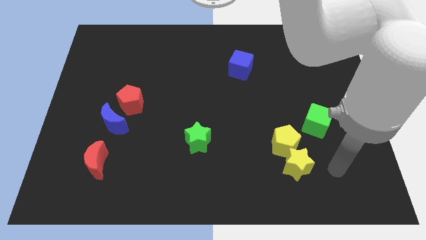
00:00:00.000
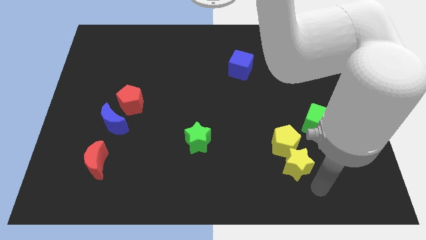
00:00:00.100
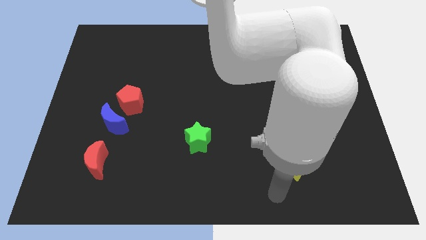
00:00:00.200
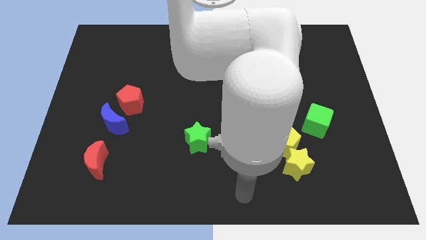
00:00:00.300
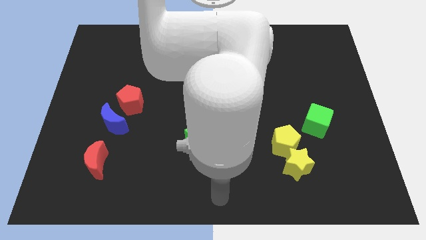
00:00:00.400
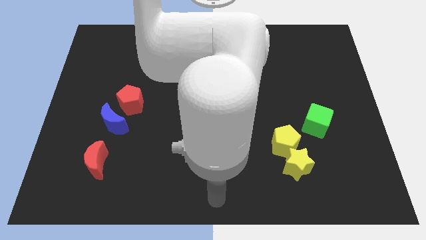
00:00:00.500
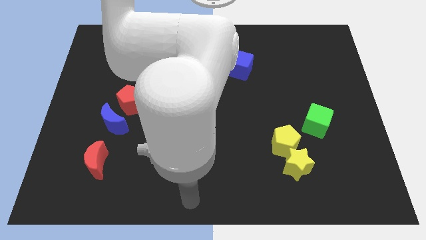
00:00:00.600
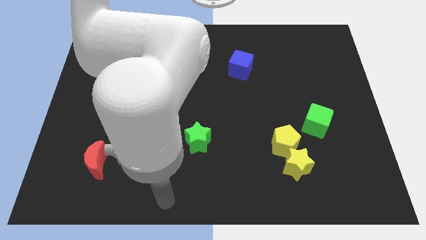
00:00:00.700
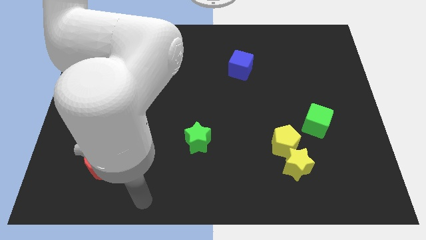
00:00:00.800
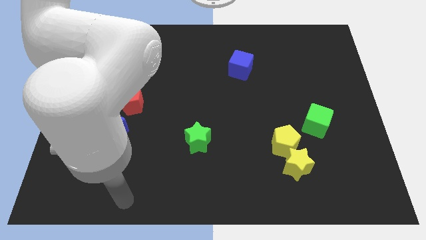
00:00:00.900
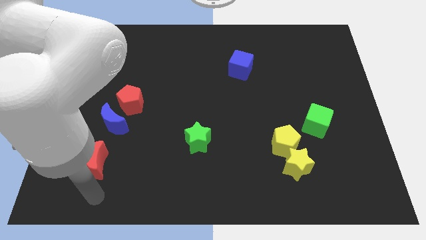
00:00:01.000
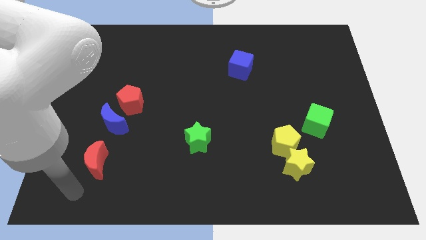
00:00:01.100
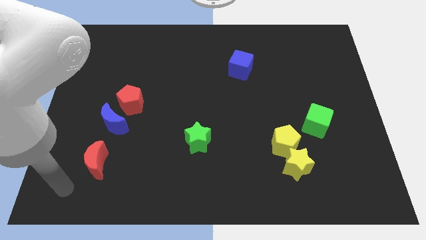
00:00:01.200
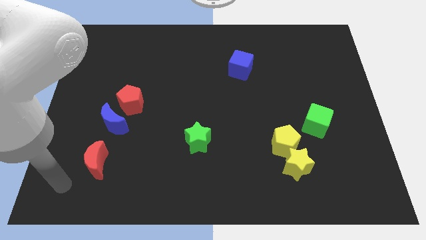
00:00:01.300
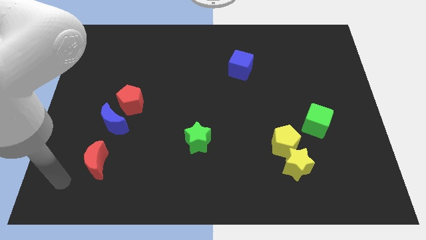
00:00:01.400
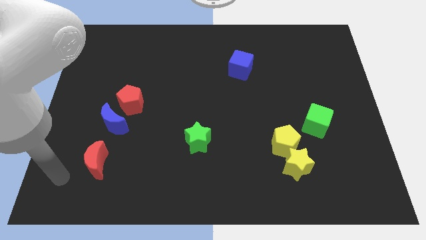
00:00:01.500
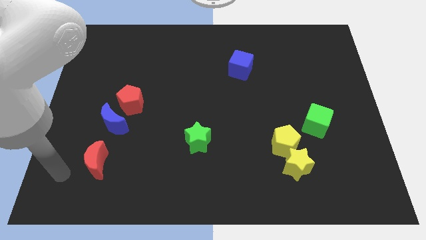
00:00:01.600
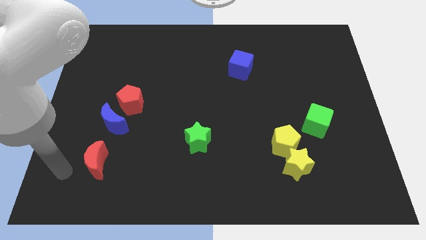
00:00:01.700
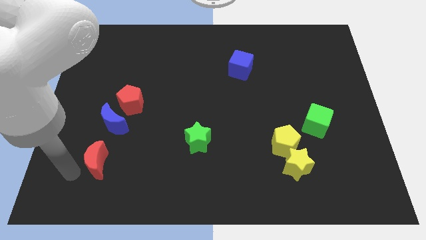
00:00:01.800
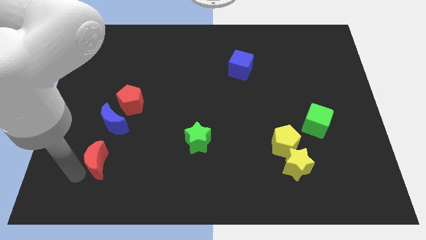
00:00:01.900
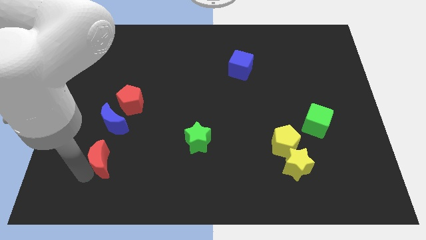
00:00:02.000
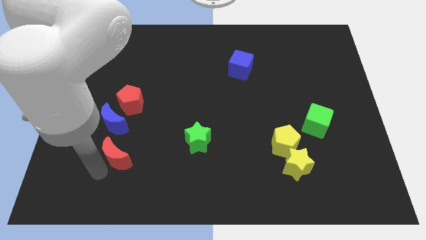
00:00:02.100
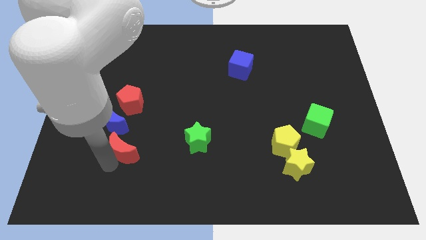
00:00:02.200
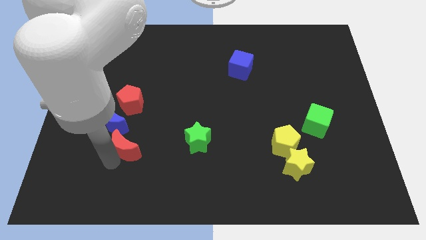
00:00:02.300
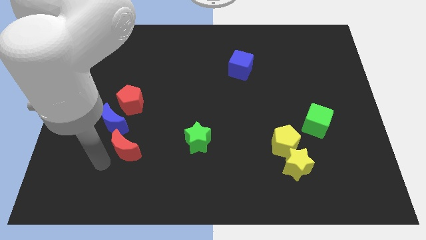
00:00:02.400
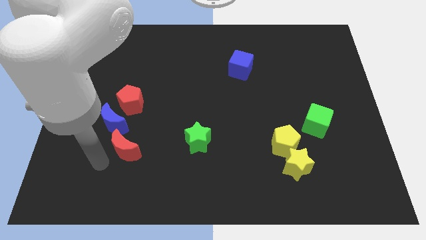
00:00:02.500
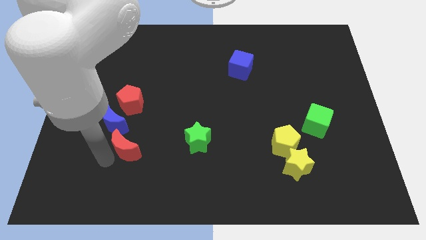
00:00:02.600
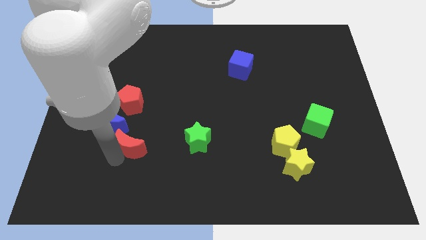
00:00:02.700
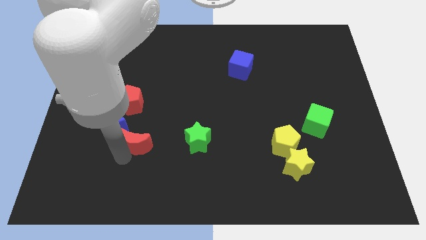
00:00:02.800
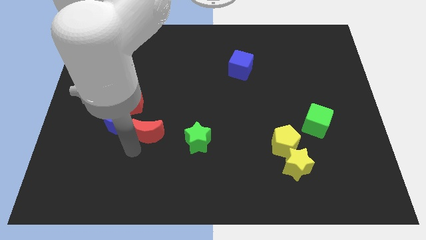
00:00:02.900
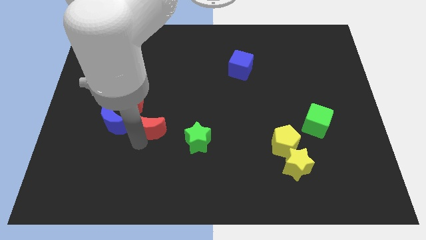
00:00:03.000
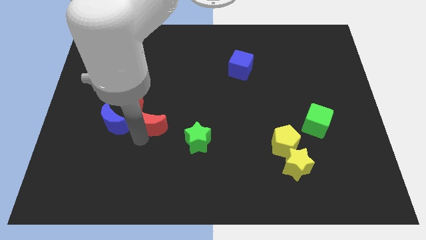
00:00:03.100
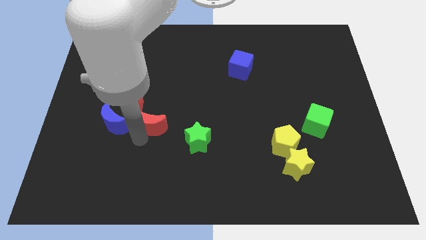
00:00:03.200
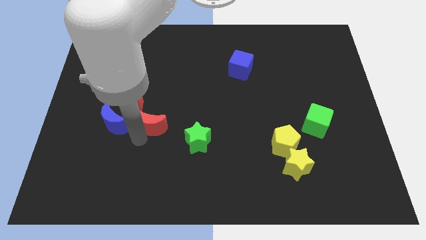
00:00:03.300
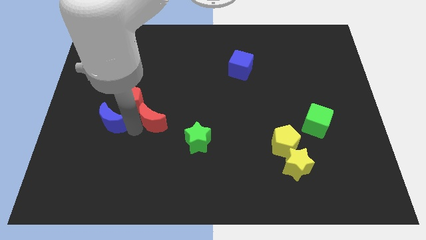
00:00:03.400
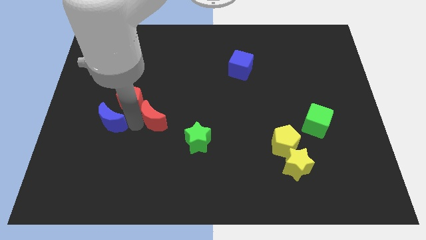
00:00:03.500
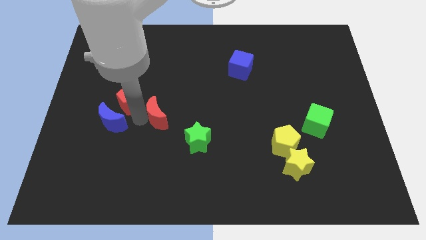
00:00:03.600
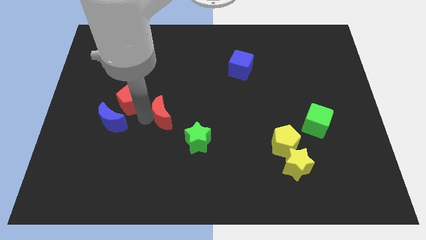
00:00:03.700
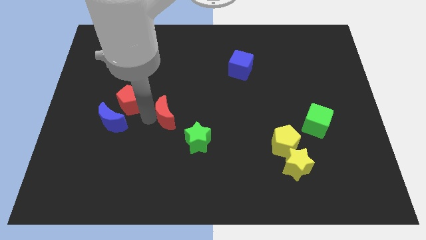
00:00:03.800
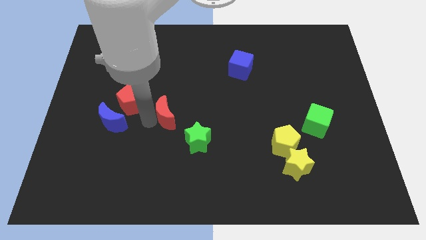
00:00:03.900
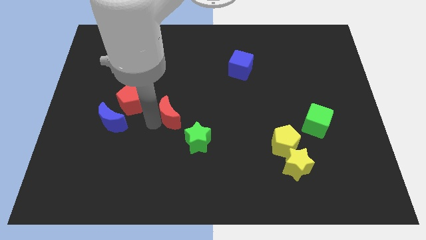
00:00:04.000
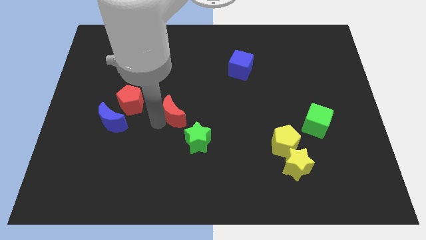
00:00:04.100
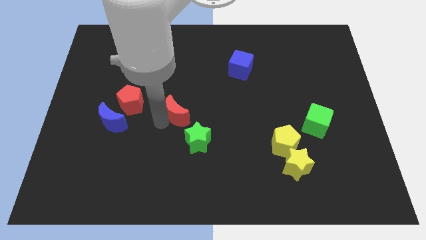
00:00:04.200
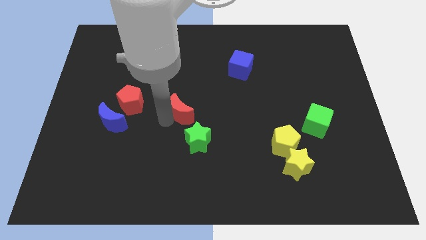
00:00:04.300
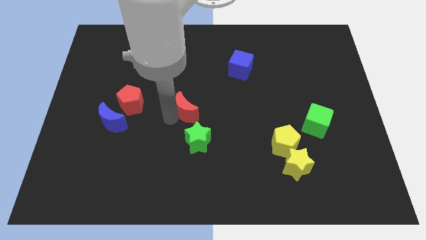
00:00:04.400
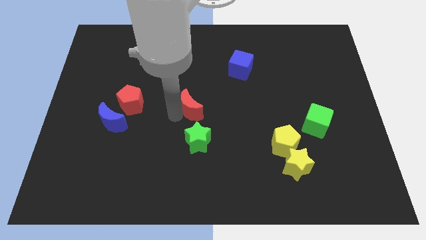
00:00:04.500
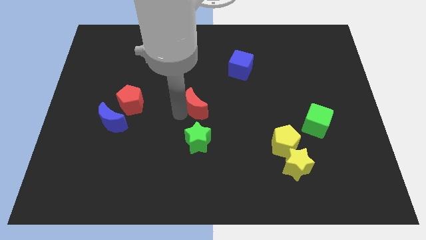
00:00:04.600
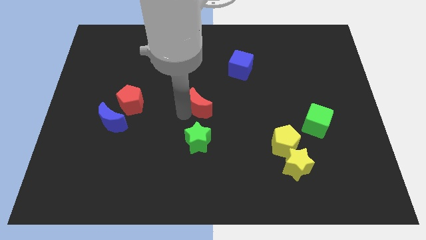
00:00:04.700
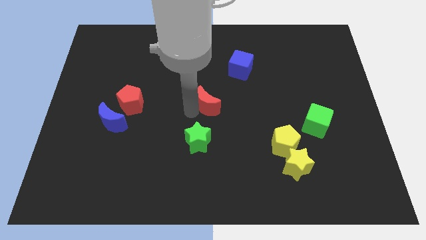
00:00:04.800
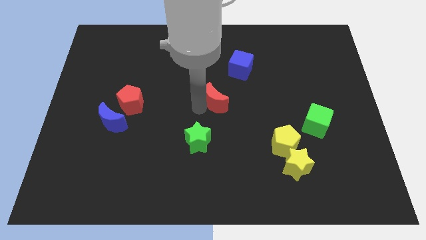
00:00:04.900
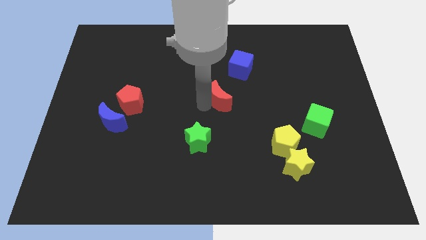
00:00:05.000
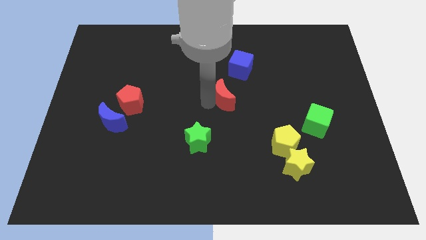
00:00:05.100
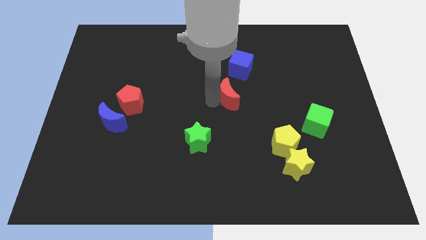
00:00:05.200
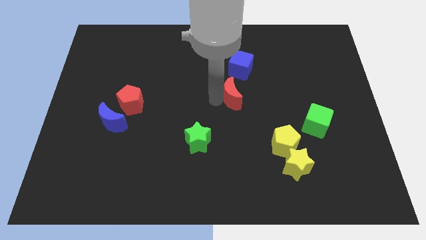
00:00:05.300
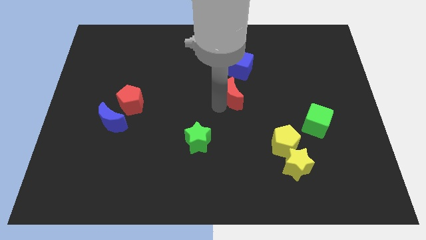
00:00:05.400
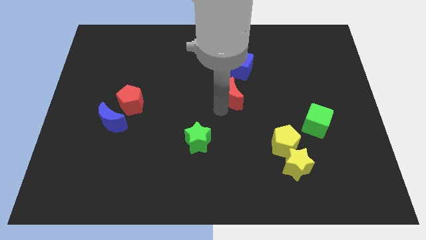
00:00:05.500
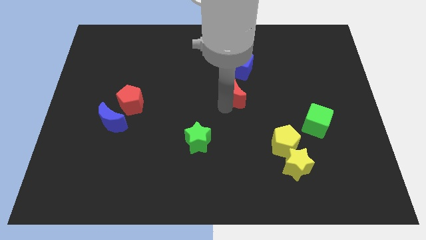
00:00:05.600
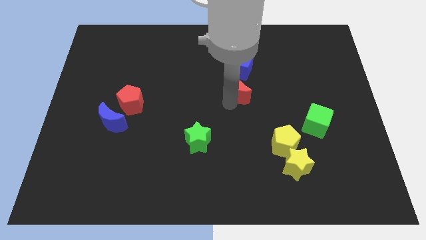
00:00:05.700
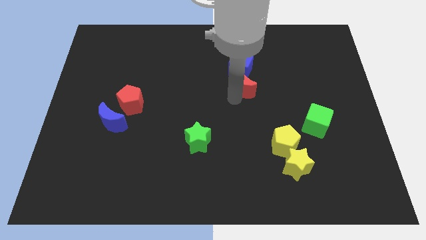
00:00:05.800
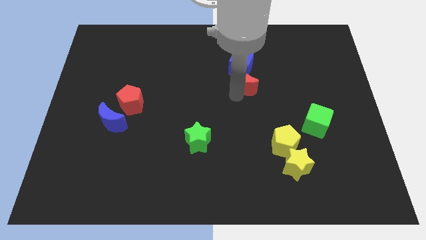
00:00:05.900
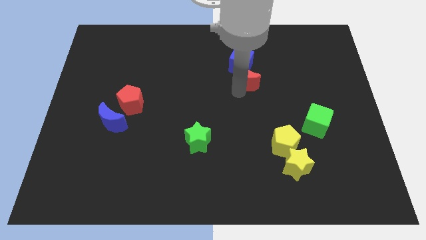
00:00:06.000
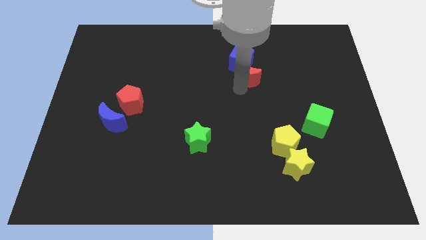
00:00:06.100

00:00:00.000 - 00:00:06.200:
slide the red moon next to the blue cube

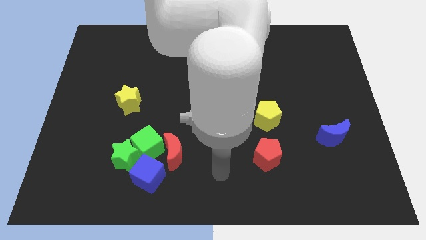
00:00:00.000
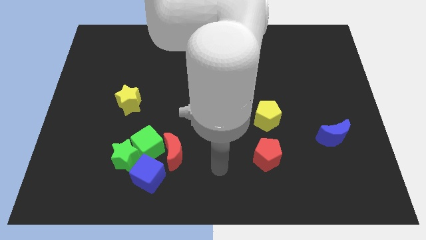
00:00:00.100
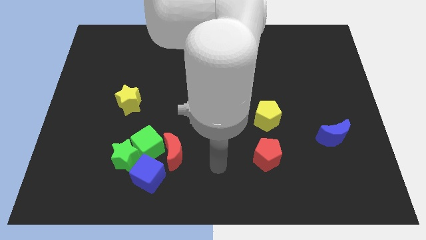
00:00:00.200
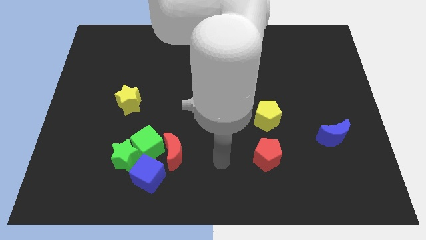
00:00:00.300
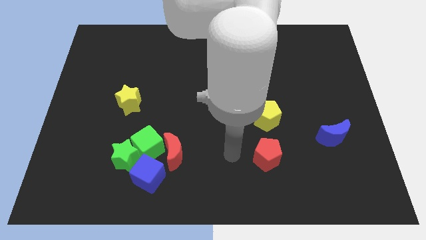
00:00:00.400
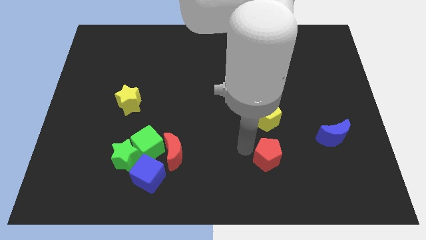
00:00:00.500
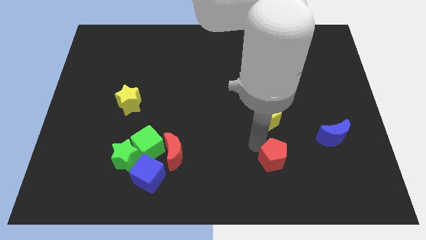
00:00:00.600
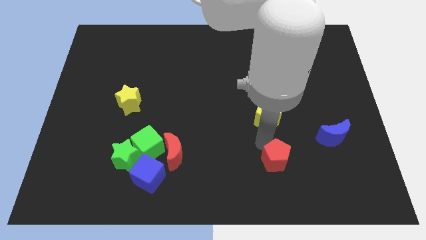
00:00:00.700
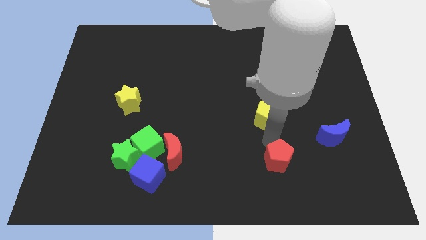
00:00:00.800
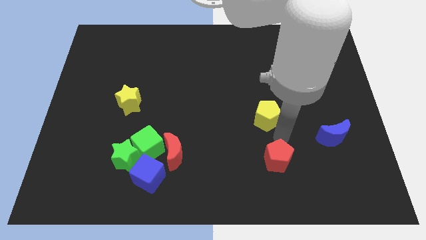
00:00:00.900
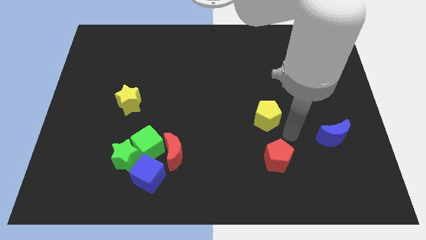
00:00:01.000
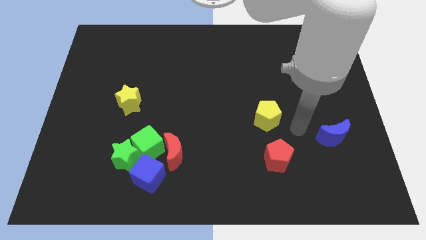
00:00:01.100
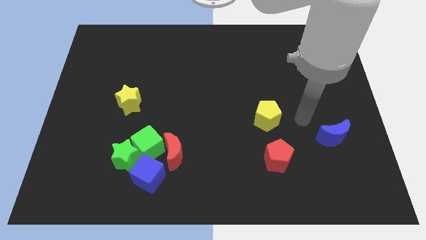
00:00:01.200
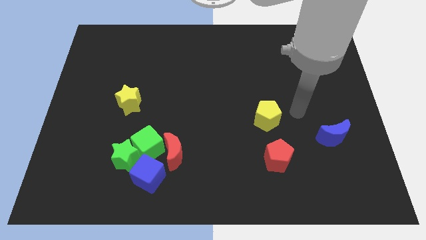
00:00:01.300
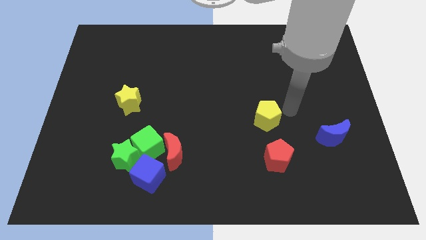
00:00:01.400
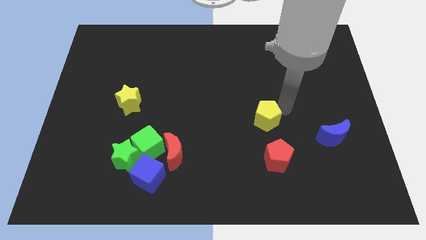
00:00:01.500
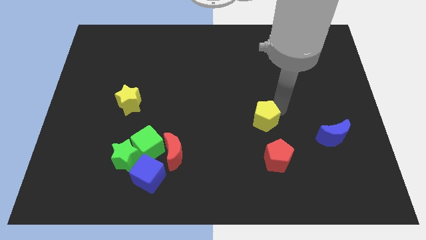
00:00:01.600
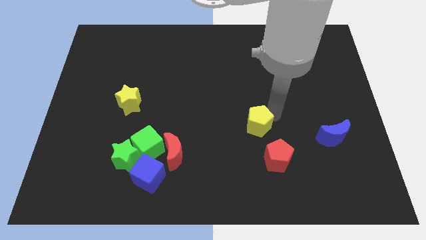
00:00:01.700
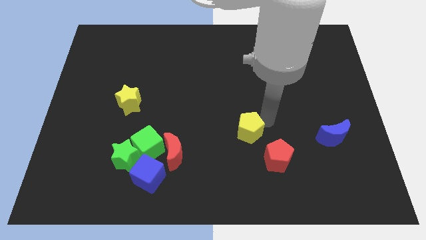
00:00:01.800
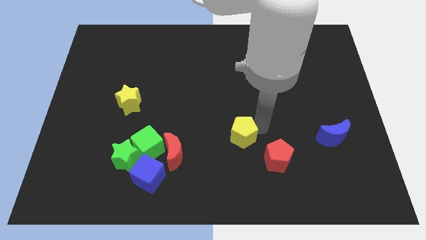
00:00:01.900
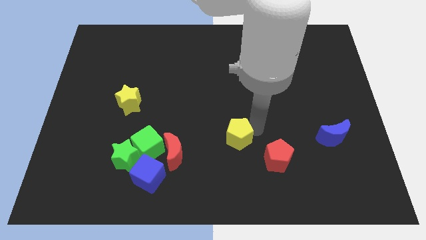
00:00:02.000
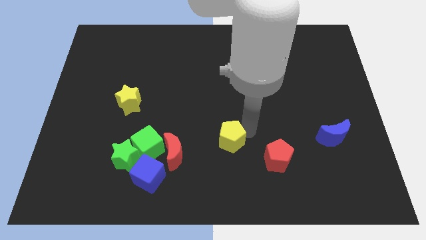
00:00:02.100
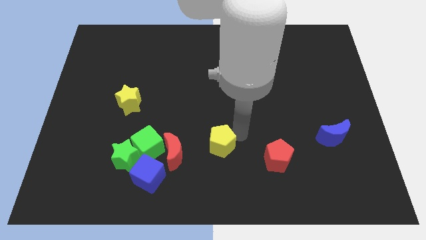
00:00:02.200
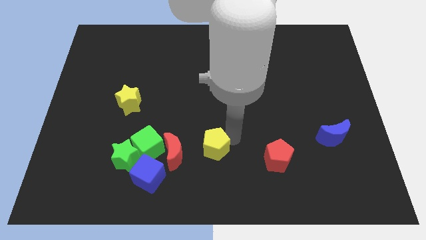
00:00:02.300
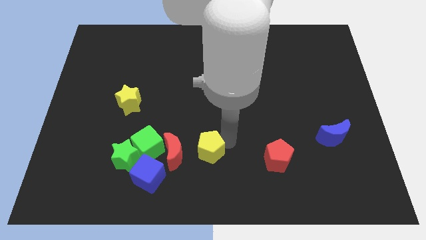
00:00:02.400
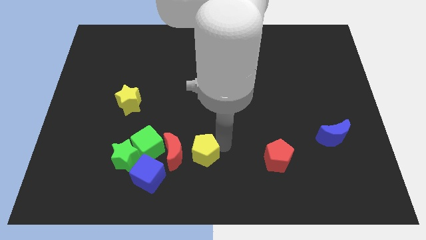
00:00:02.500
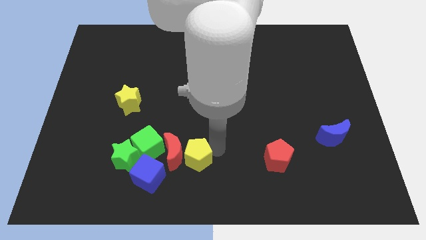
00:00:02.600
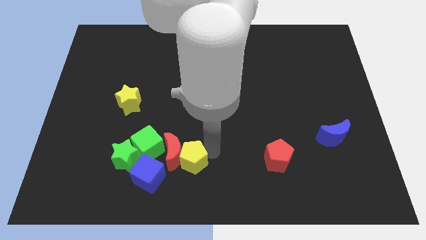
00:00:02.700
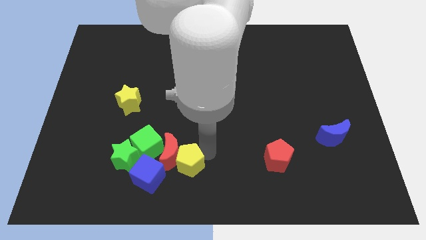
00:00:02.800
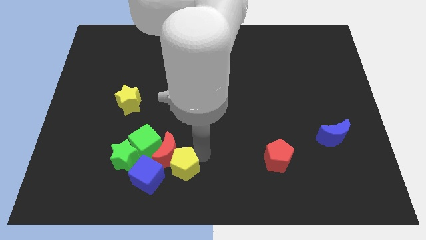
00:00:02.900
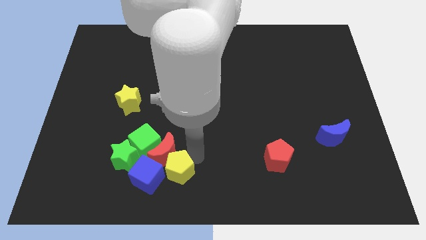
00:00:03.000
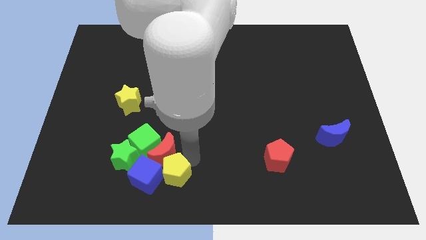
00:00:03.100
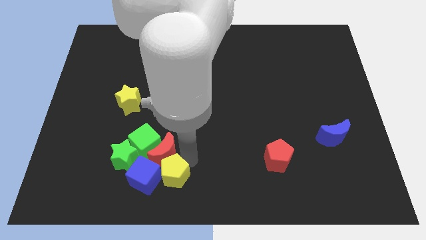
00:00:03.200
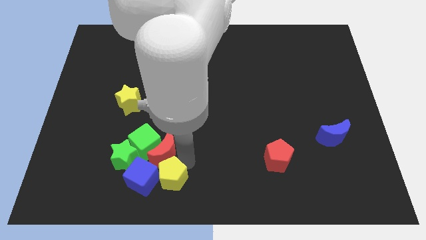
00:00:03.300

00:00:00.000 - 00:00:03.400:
move the yellow pentagon next to the blue cube
